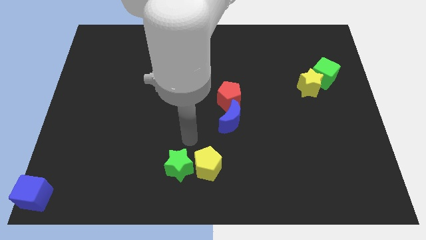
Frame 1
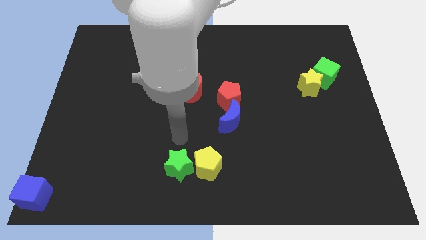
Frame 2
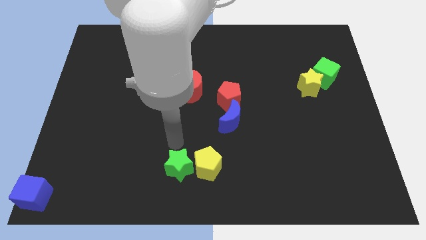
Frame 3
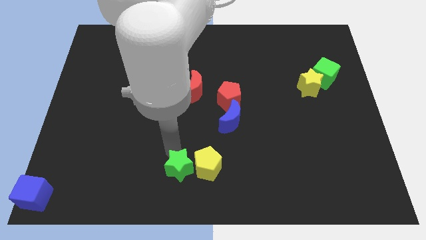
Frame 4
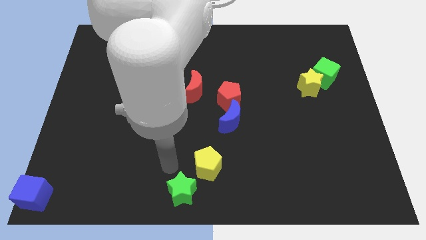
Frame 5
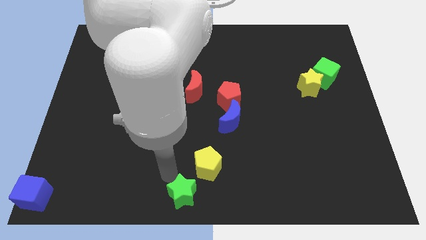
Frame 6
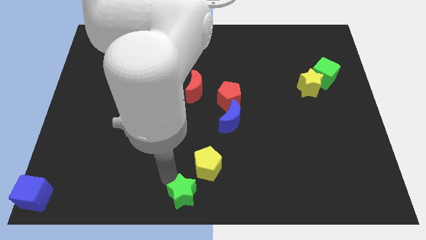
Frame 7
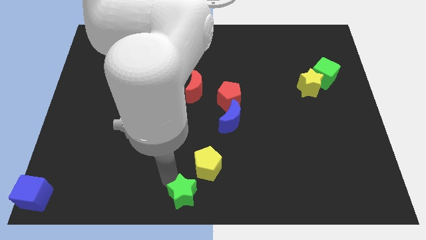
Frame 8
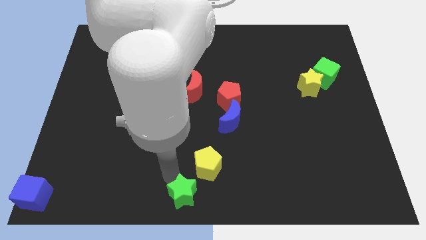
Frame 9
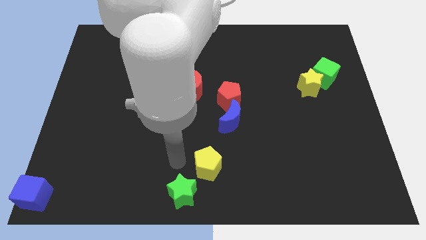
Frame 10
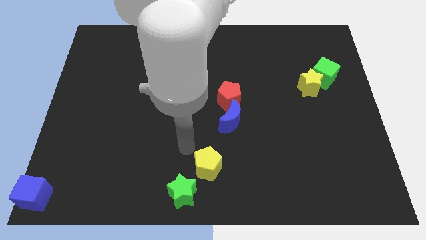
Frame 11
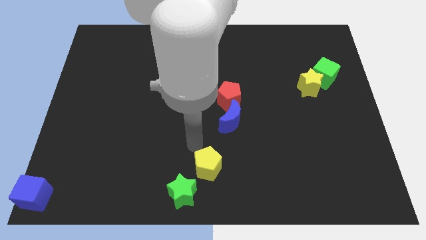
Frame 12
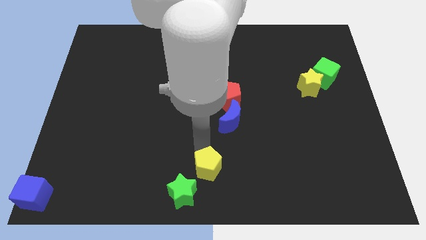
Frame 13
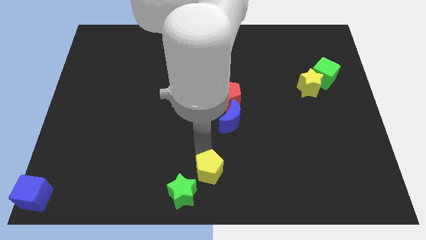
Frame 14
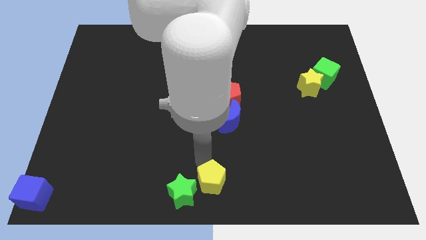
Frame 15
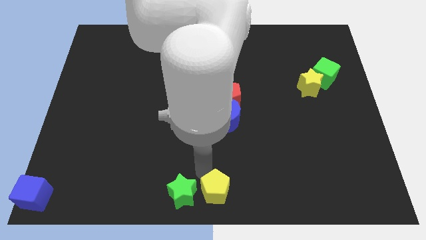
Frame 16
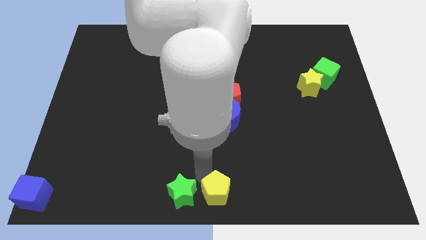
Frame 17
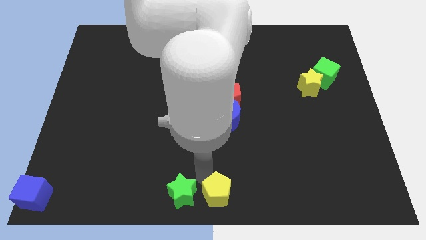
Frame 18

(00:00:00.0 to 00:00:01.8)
place the green star at the bottom center of the board

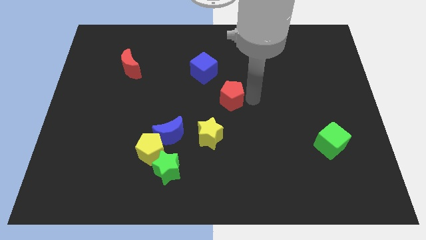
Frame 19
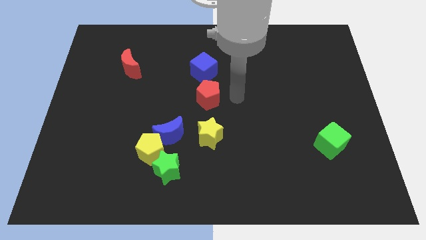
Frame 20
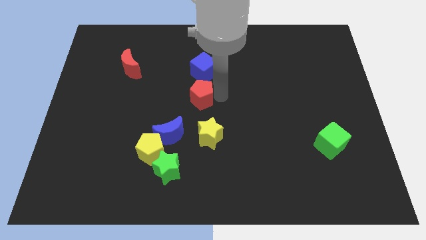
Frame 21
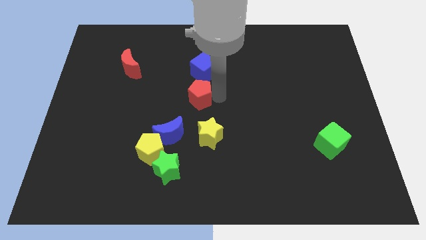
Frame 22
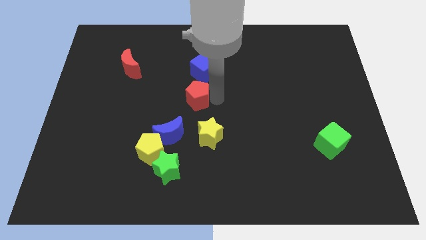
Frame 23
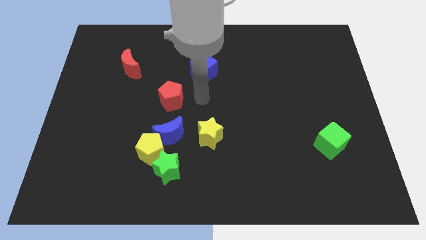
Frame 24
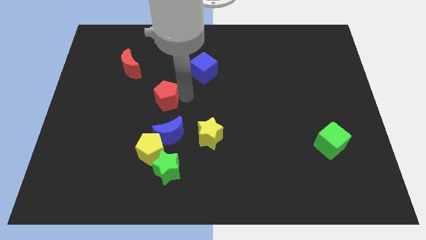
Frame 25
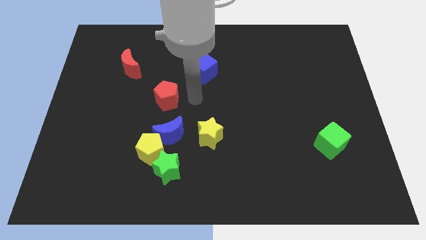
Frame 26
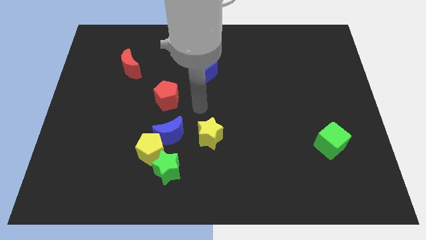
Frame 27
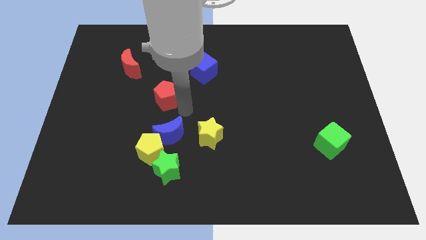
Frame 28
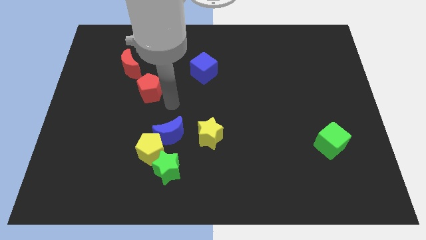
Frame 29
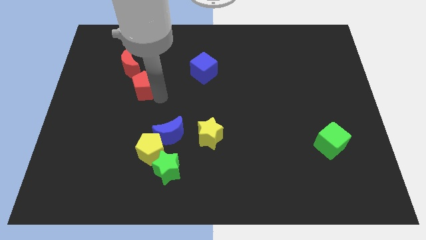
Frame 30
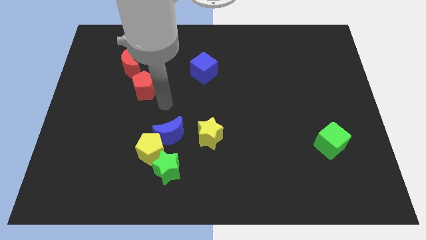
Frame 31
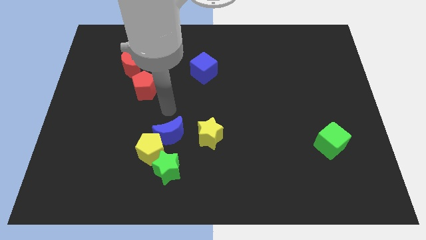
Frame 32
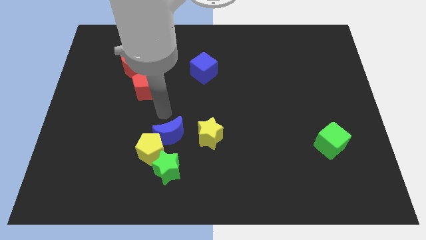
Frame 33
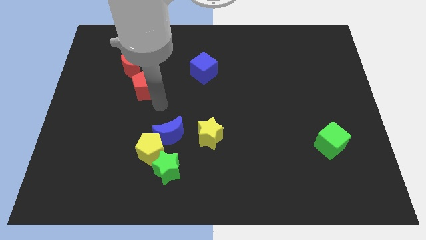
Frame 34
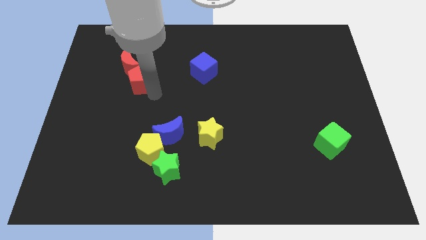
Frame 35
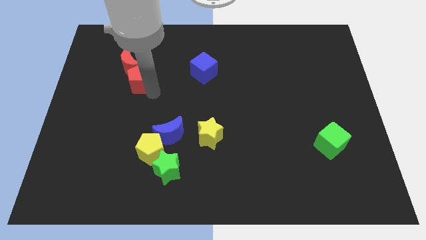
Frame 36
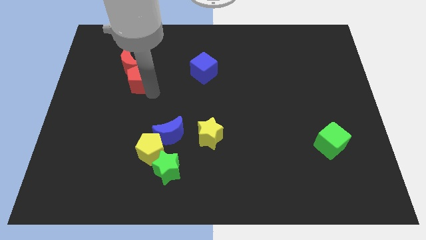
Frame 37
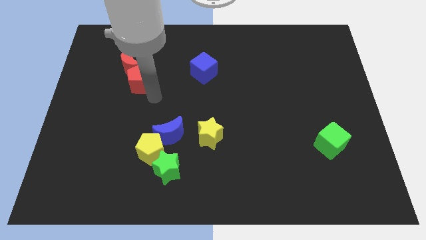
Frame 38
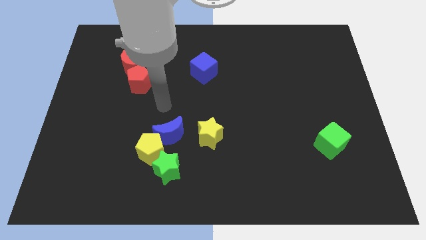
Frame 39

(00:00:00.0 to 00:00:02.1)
move the red crescent into the red moon

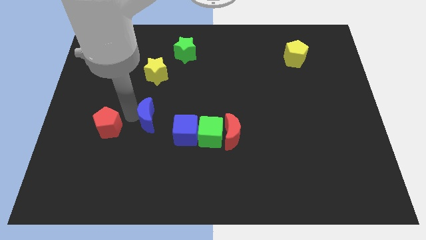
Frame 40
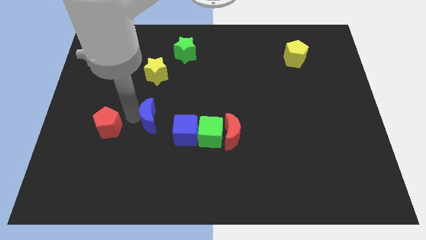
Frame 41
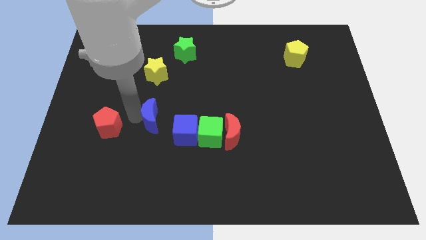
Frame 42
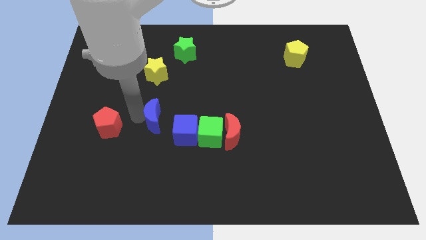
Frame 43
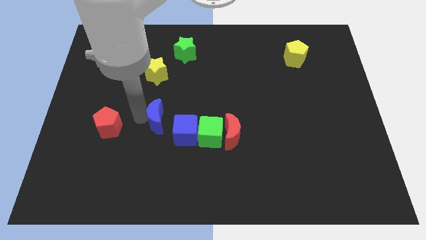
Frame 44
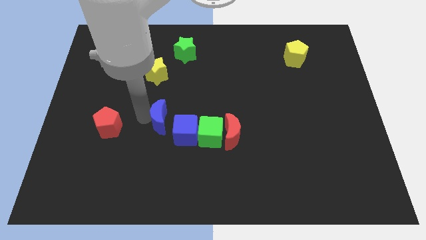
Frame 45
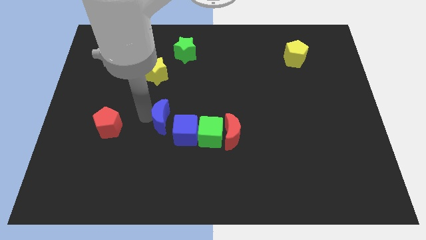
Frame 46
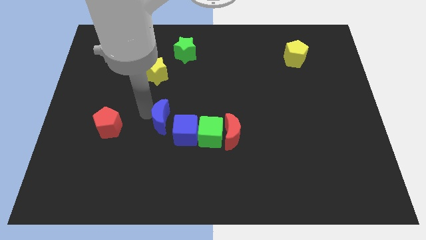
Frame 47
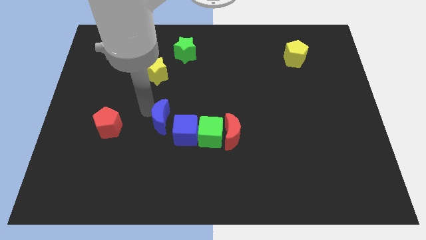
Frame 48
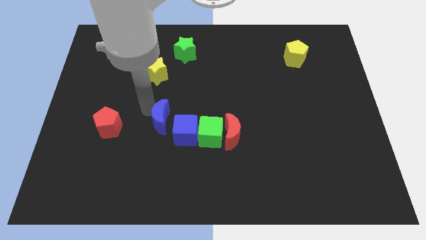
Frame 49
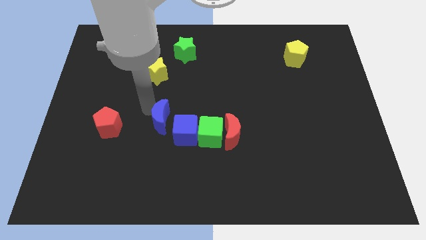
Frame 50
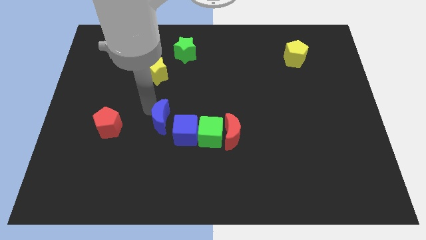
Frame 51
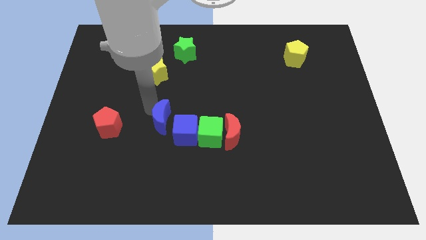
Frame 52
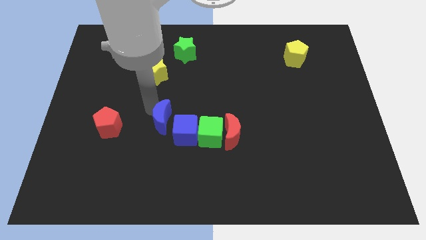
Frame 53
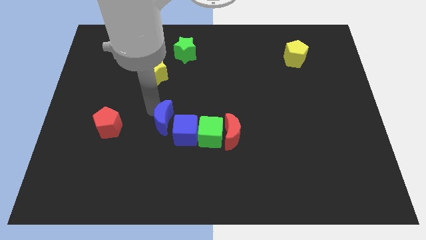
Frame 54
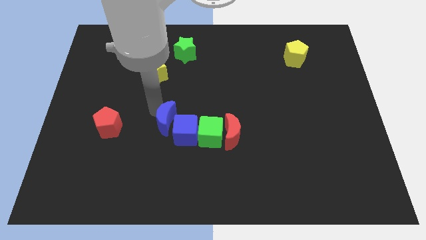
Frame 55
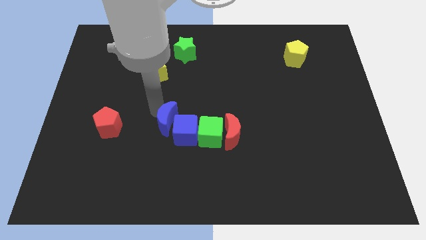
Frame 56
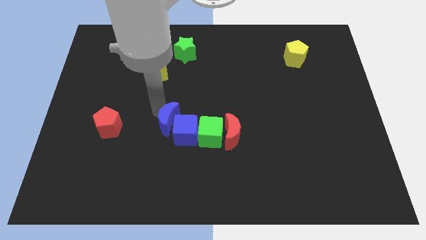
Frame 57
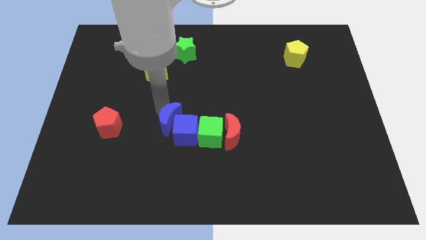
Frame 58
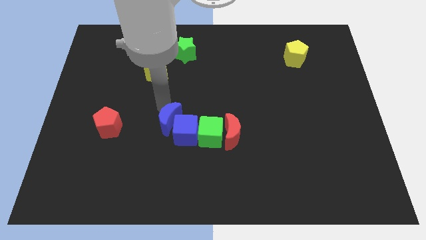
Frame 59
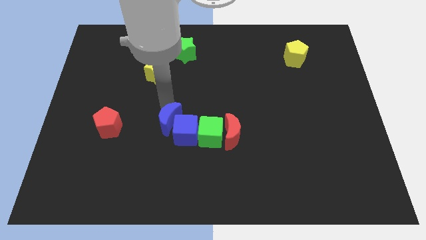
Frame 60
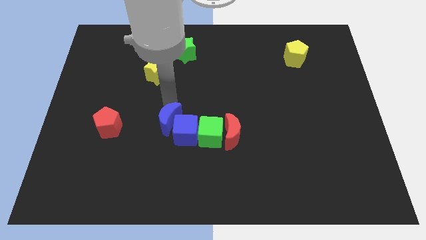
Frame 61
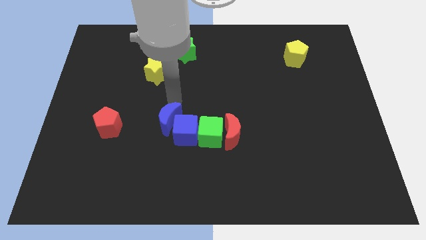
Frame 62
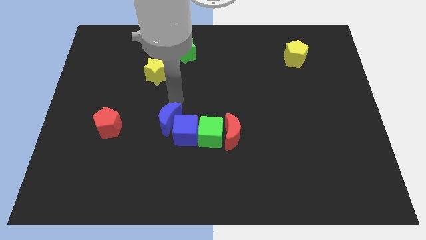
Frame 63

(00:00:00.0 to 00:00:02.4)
slide the blue moon into the blue cube

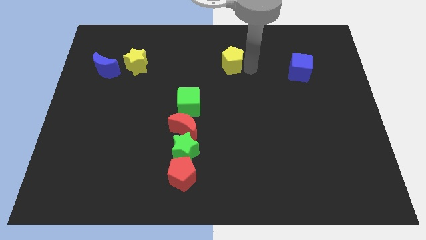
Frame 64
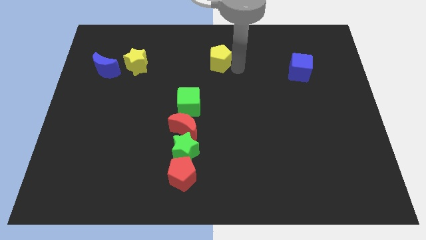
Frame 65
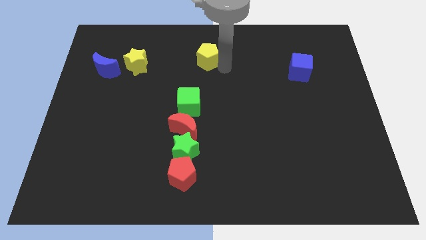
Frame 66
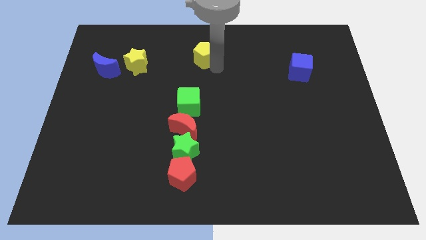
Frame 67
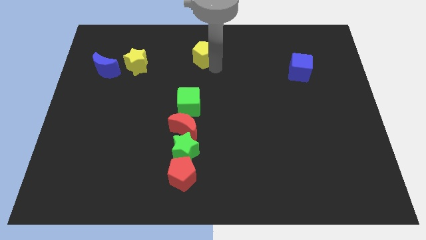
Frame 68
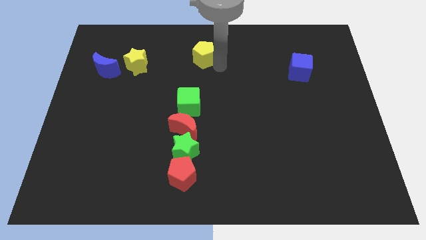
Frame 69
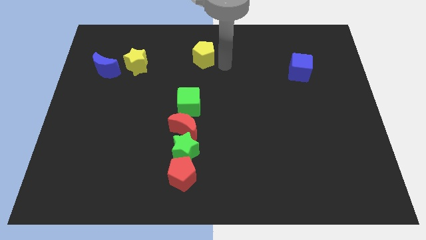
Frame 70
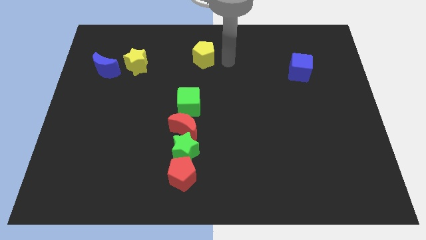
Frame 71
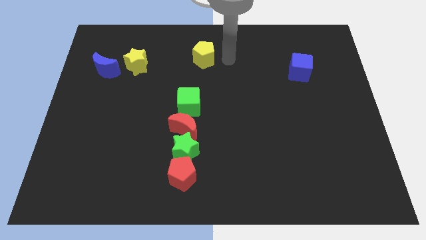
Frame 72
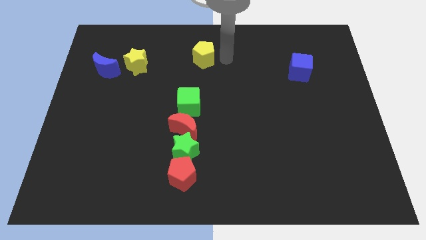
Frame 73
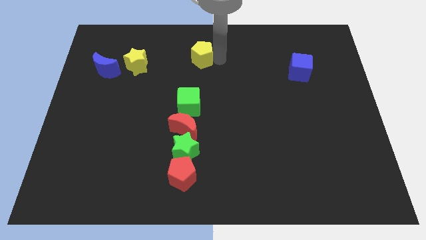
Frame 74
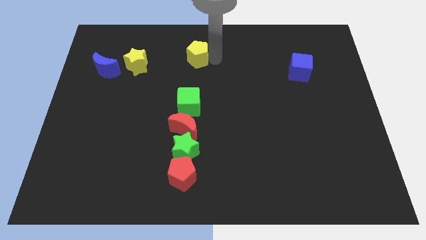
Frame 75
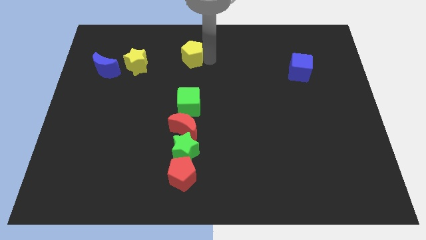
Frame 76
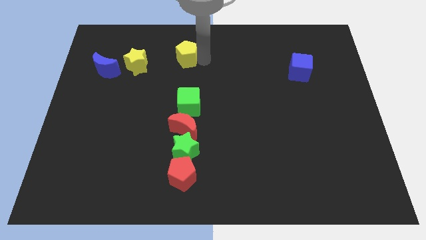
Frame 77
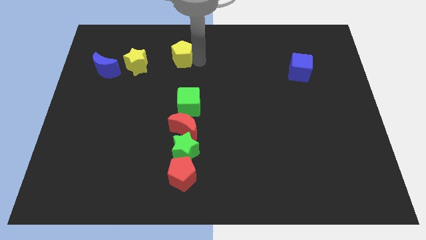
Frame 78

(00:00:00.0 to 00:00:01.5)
place the yellow pentagon at the top of the green cube

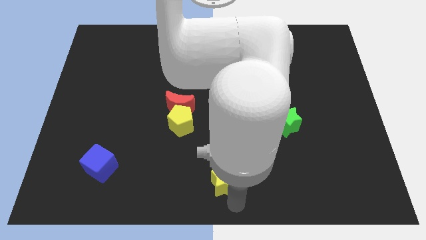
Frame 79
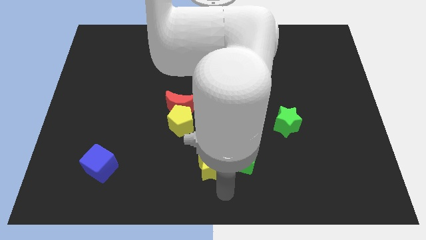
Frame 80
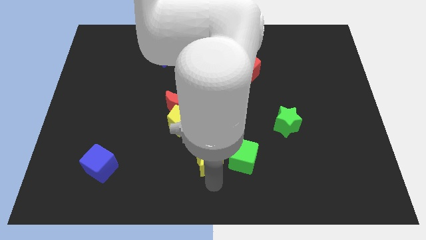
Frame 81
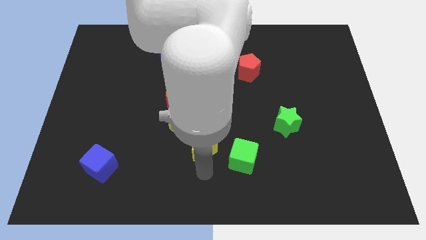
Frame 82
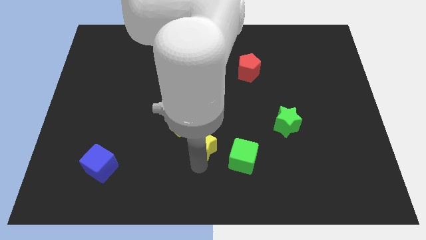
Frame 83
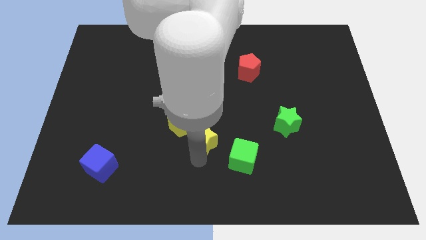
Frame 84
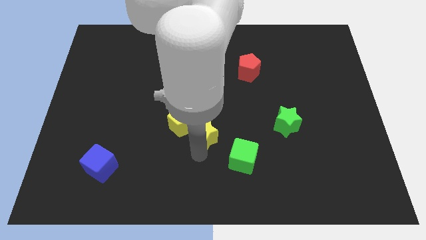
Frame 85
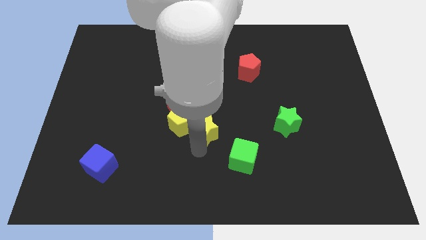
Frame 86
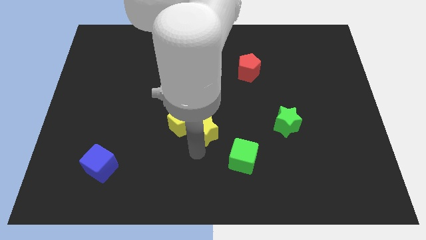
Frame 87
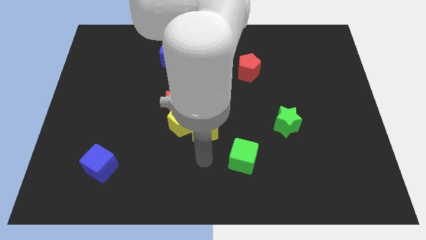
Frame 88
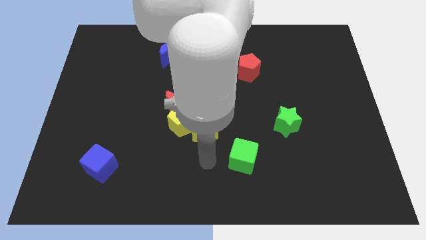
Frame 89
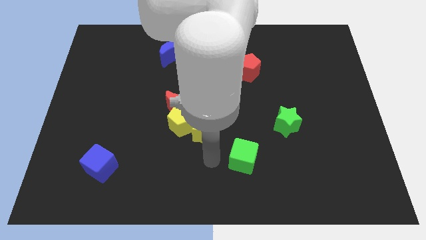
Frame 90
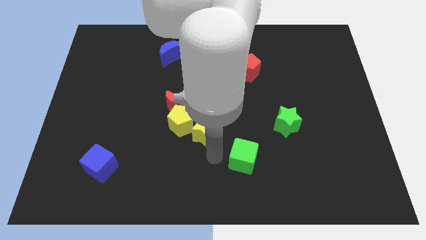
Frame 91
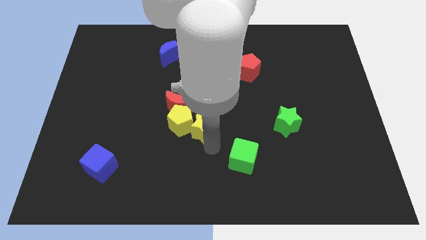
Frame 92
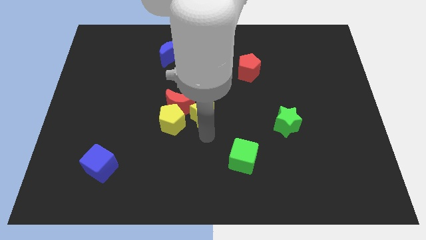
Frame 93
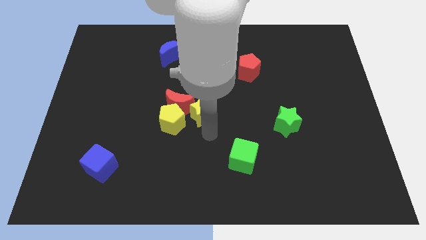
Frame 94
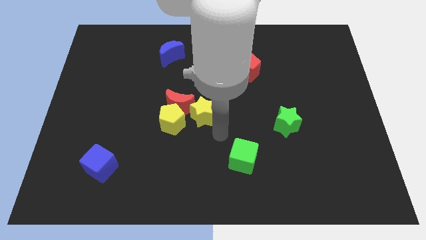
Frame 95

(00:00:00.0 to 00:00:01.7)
push the yellow star into the yellow pentagon
